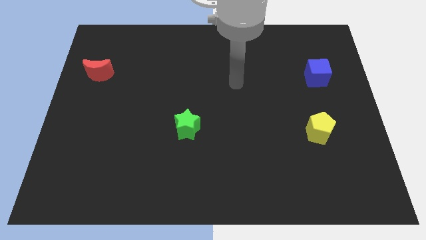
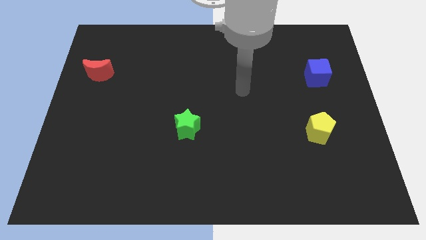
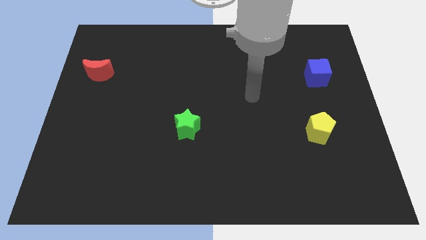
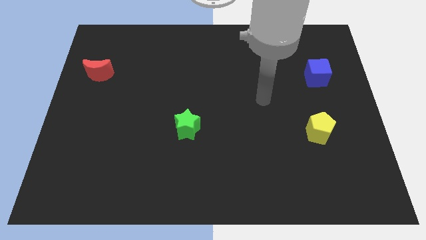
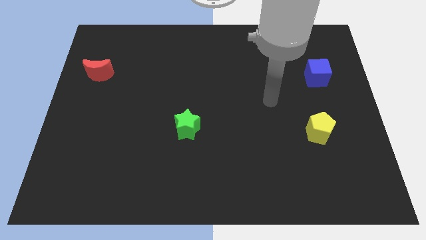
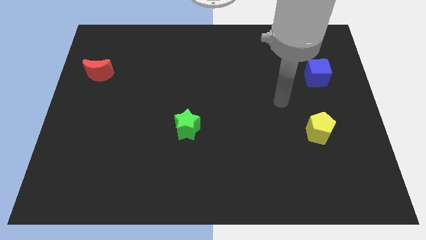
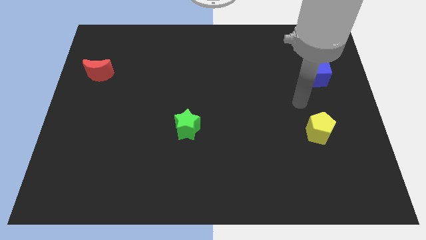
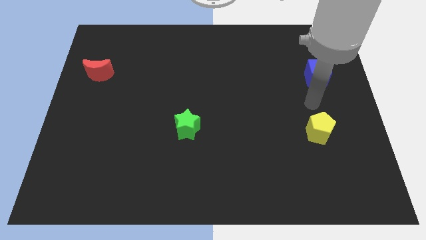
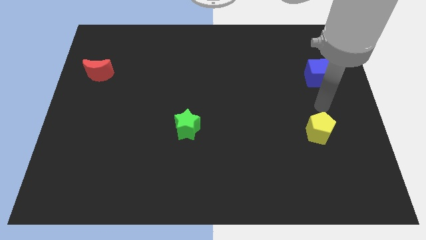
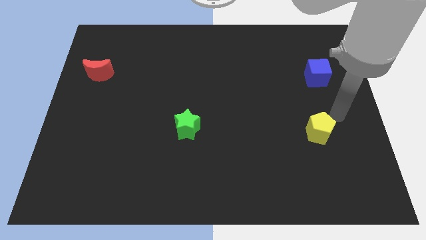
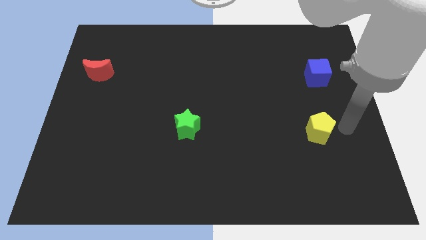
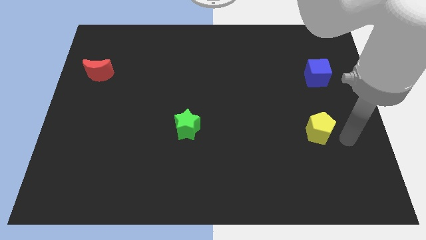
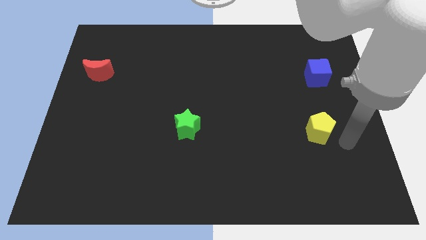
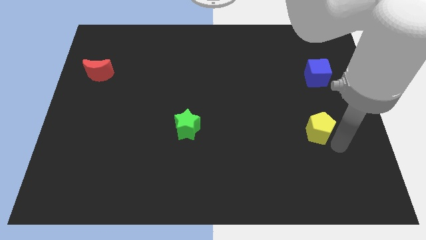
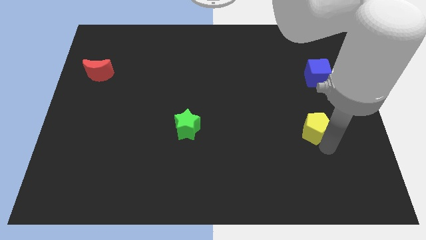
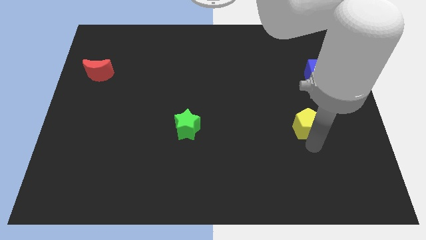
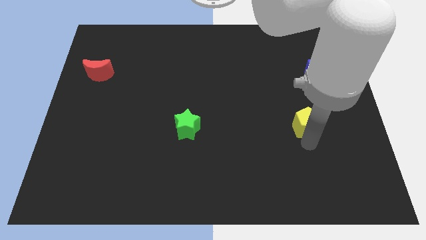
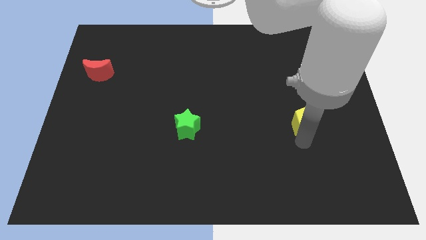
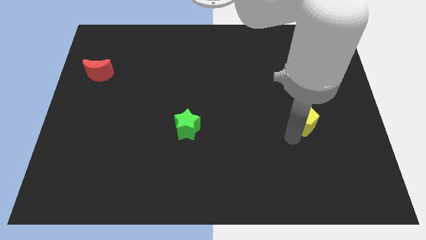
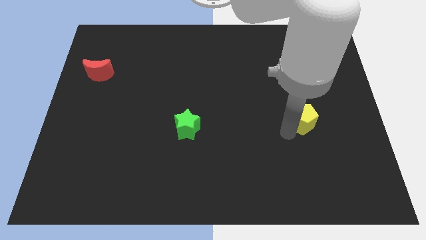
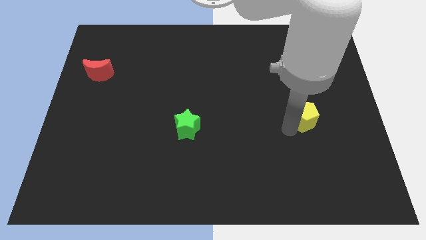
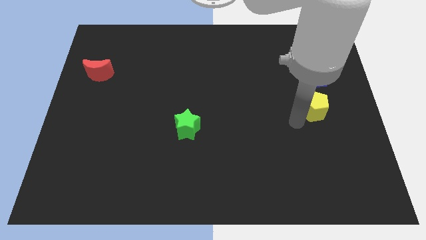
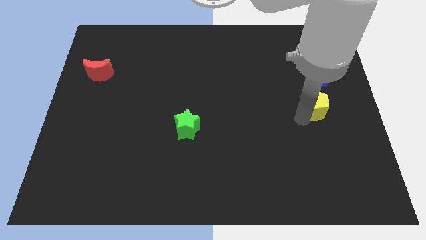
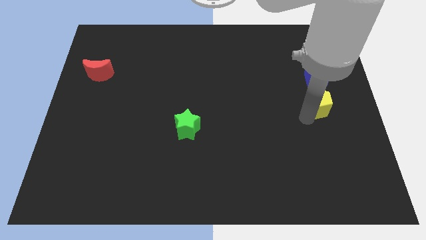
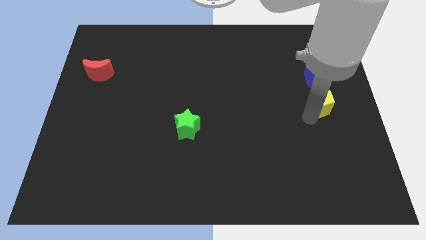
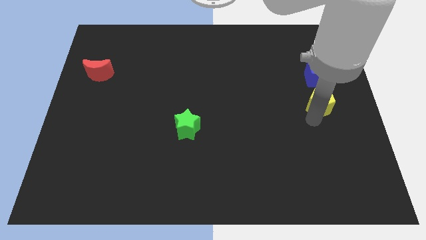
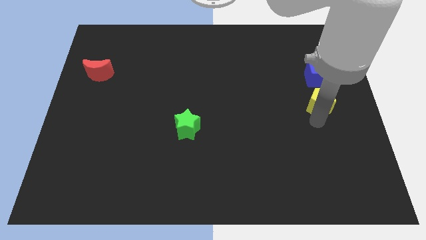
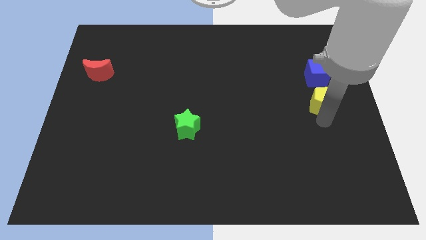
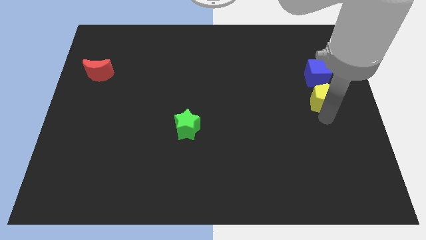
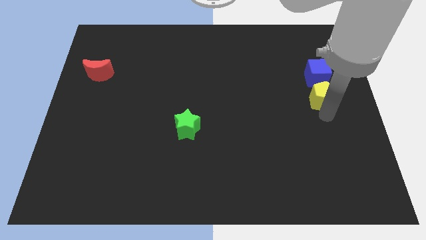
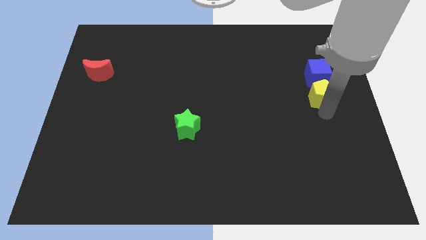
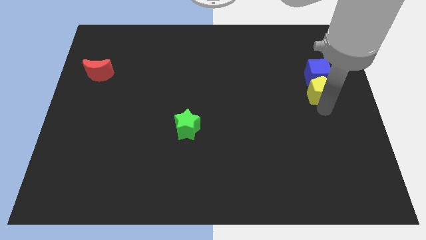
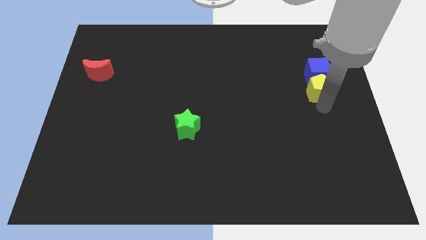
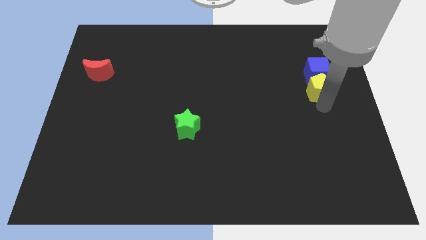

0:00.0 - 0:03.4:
put the yellow pentagon towards the blue block

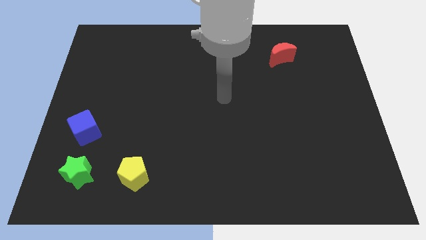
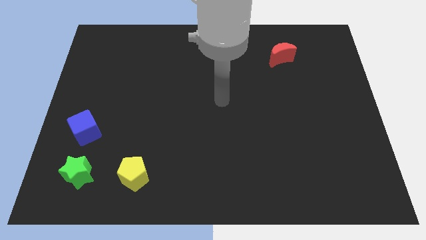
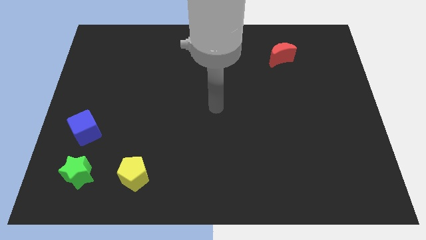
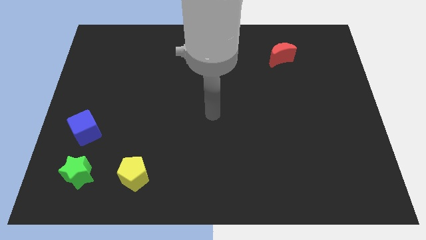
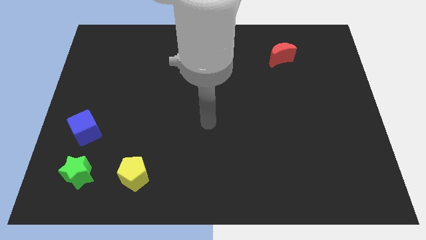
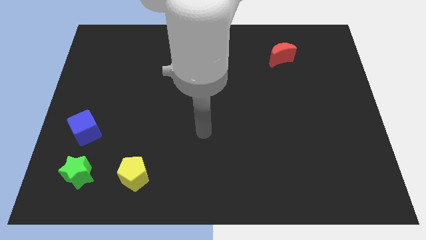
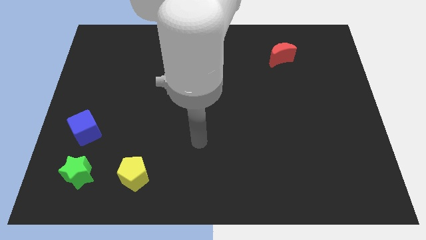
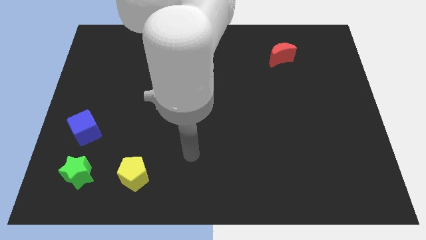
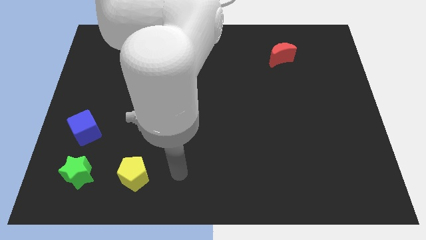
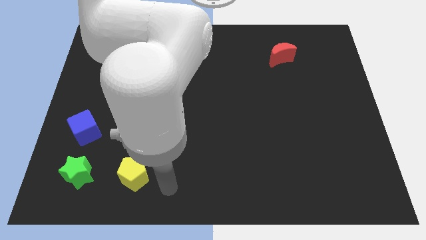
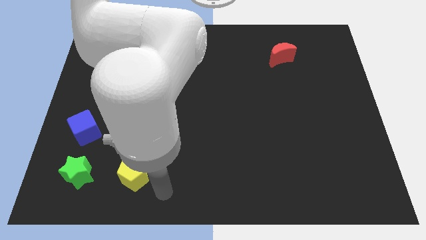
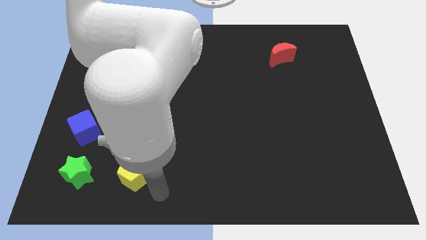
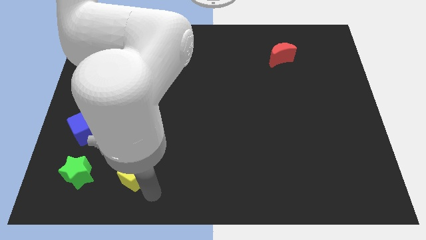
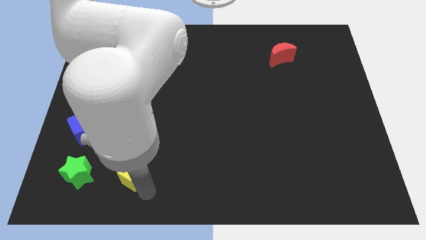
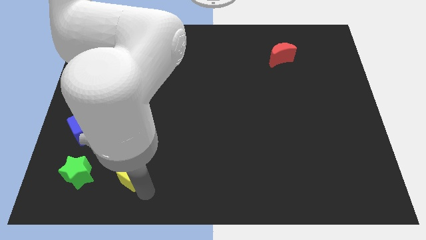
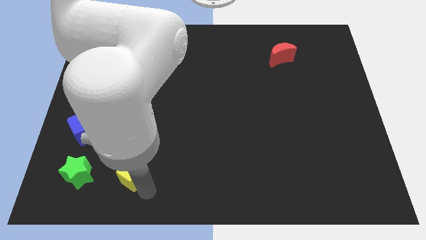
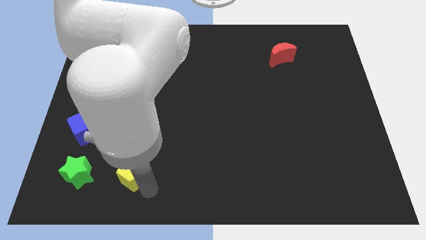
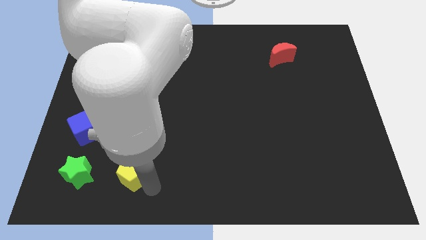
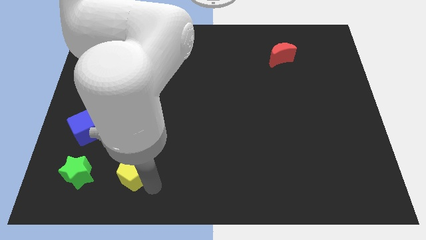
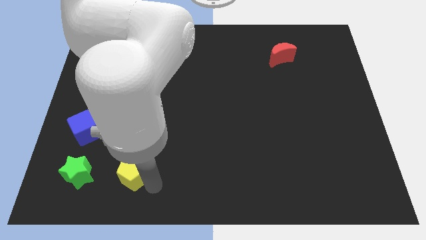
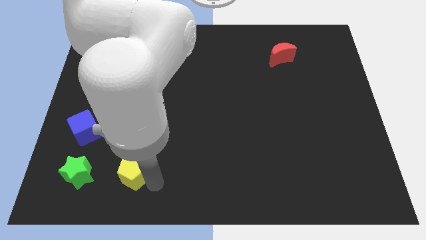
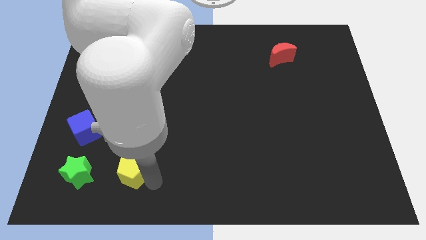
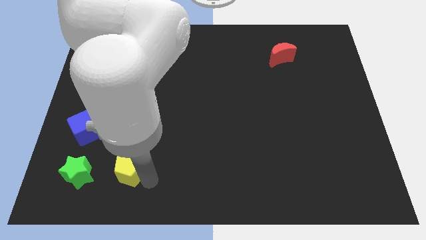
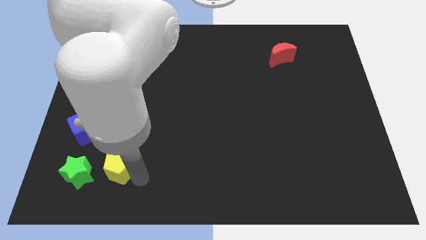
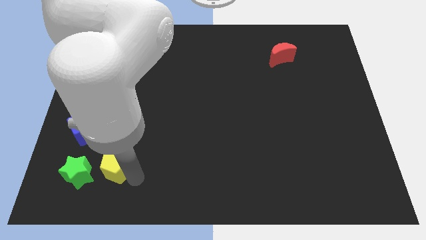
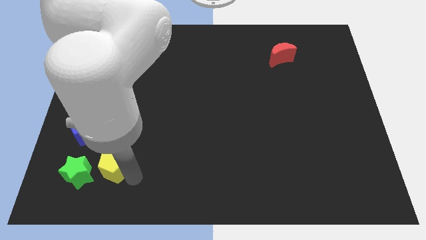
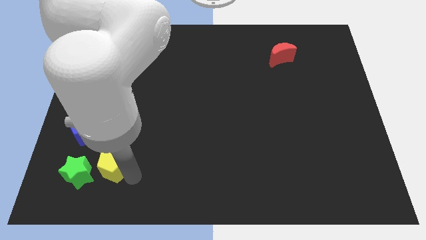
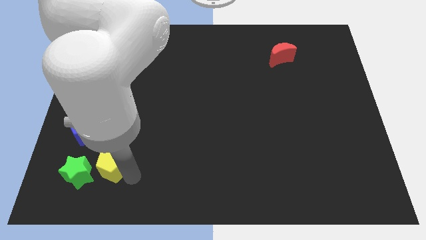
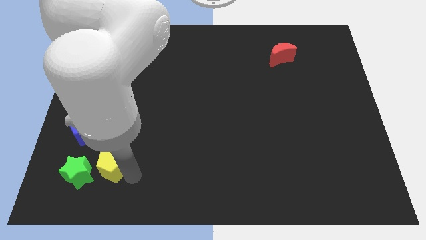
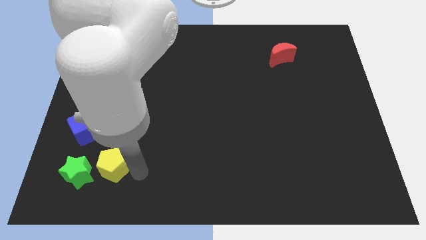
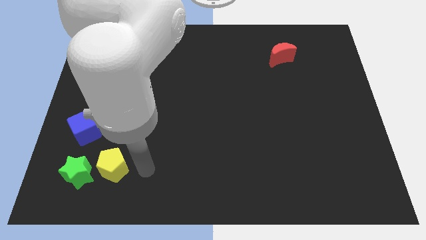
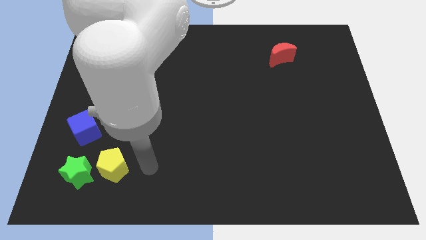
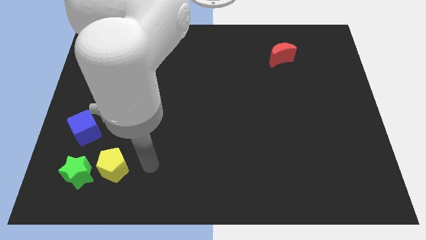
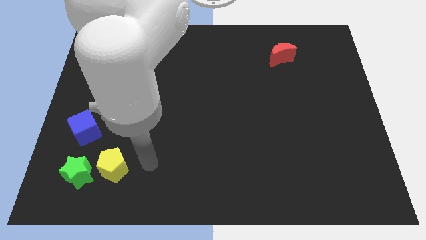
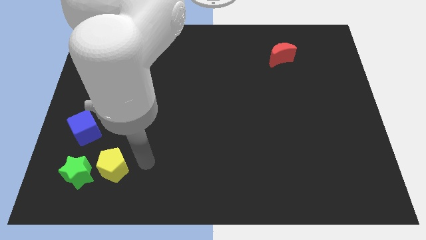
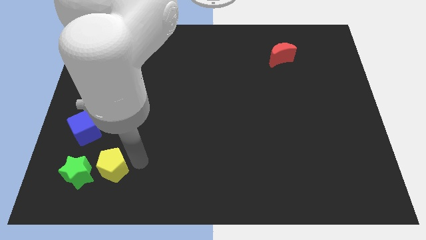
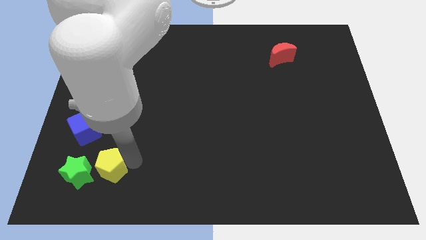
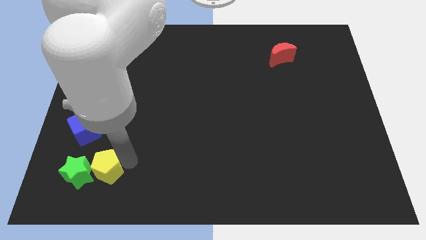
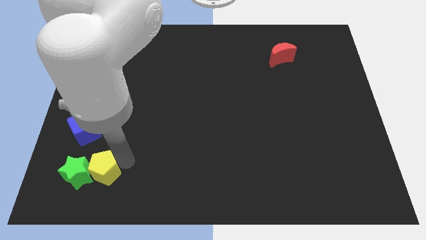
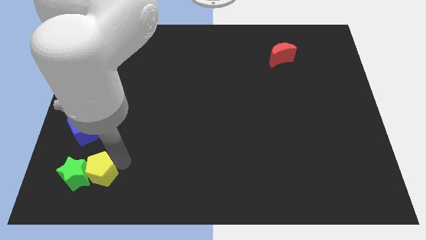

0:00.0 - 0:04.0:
slide the yellow pentagon to the green block

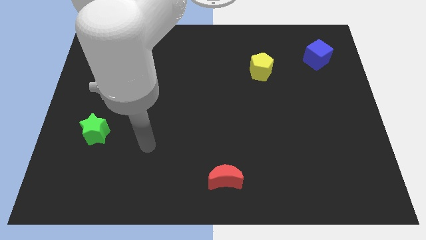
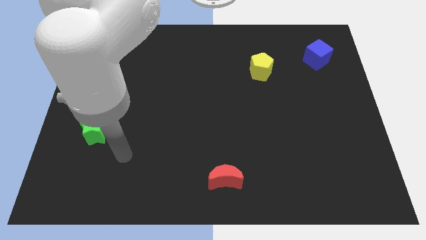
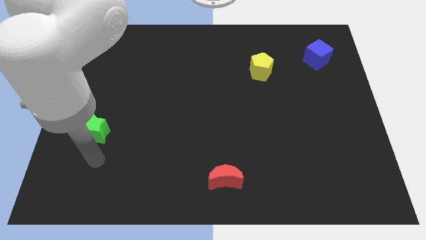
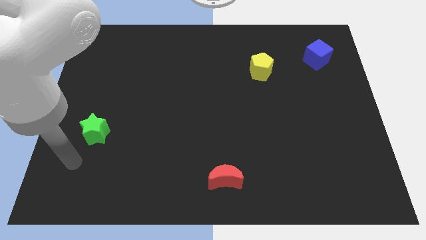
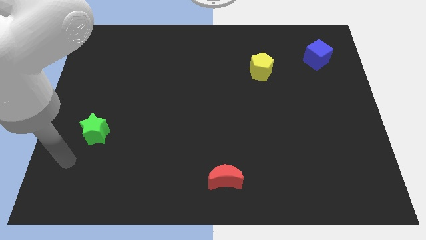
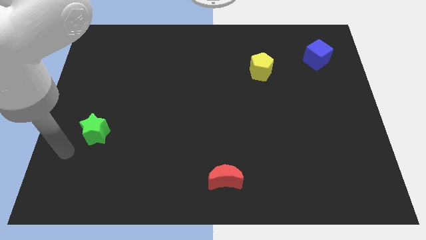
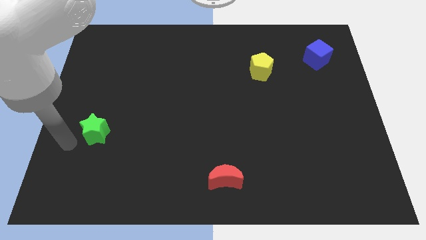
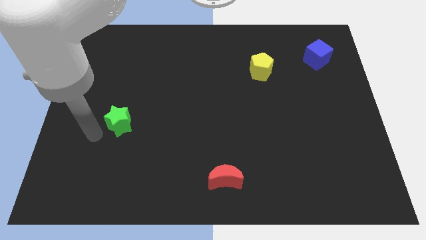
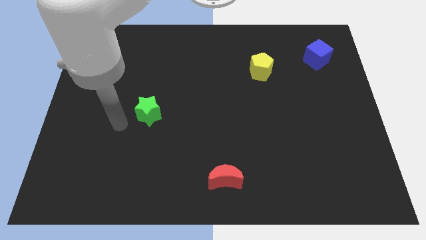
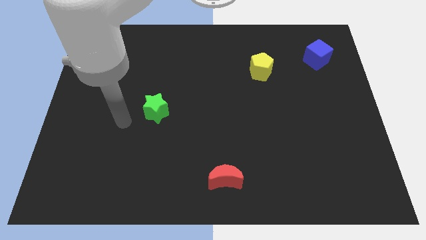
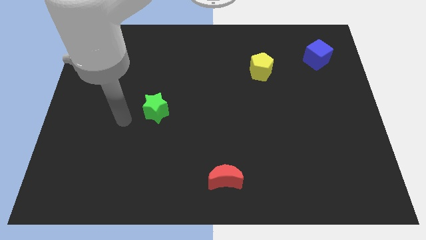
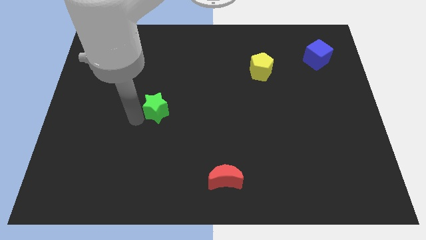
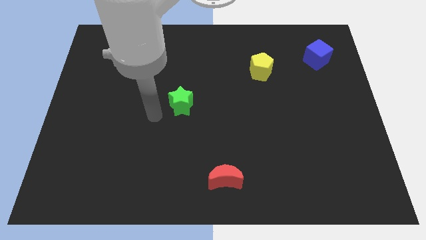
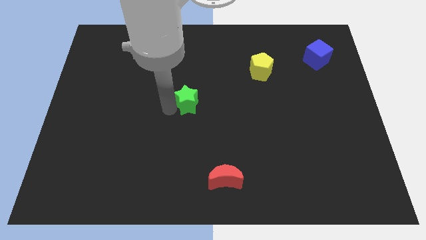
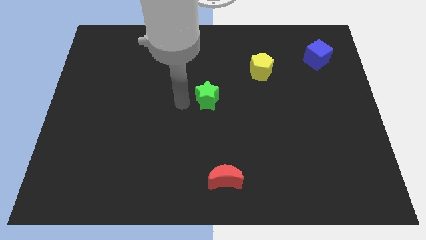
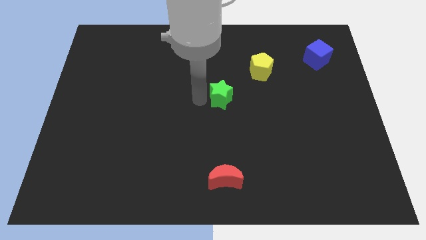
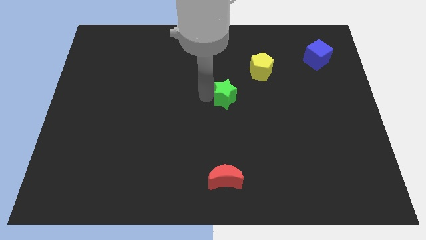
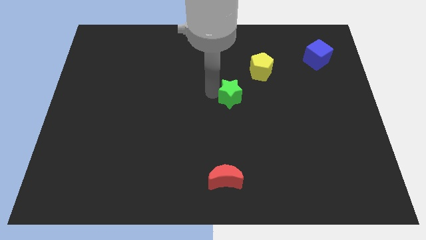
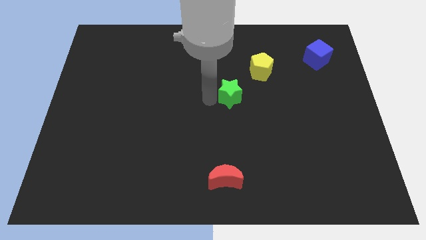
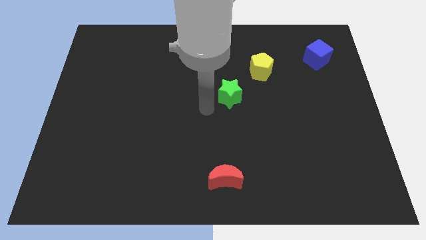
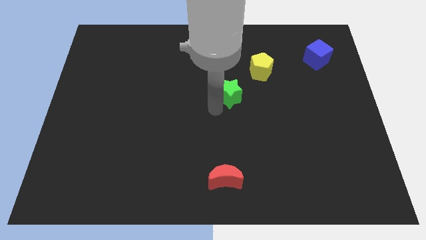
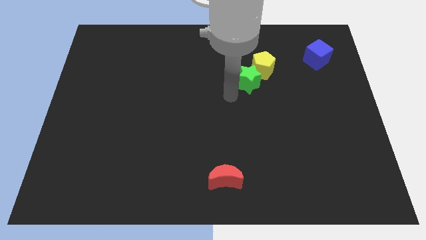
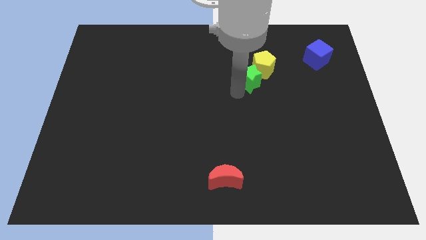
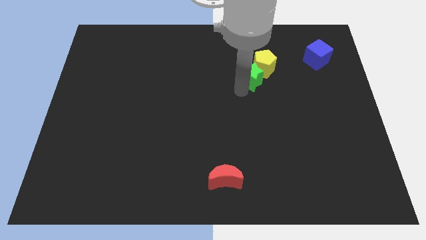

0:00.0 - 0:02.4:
slide the green star towards the pentagon
